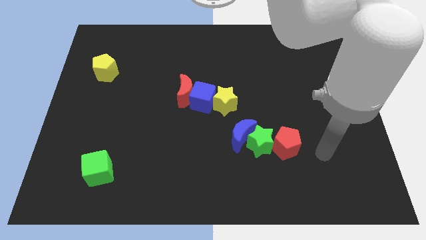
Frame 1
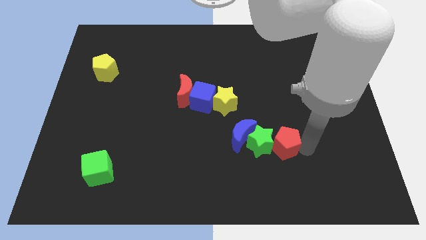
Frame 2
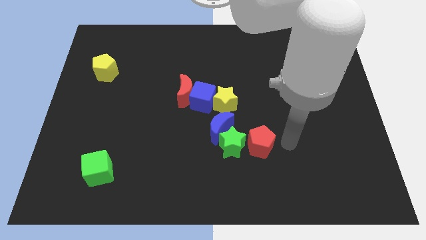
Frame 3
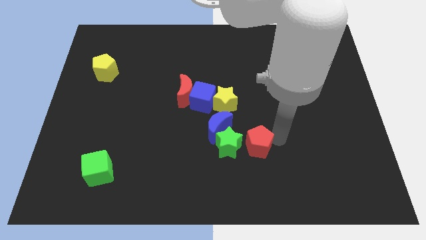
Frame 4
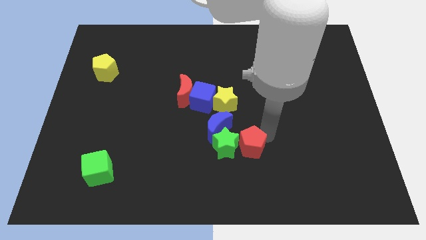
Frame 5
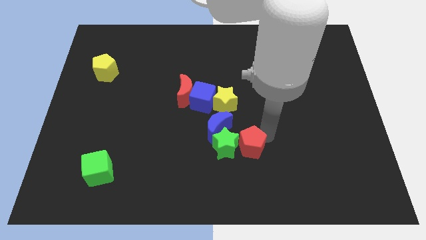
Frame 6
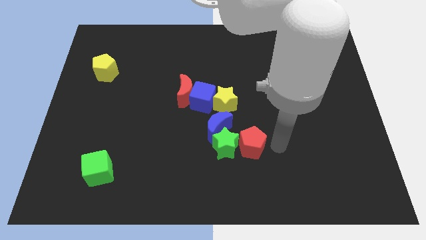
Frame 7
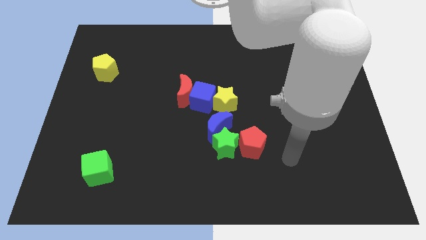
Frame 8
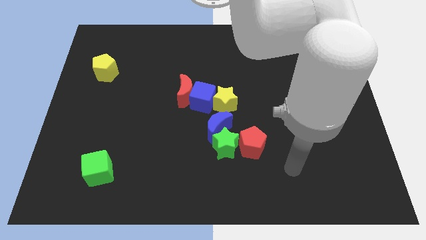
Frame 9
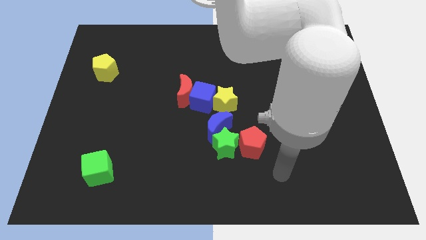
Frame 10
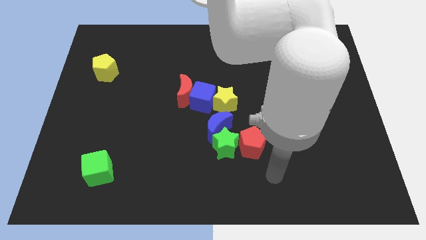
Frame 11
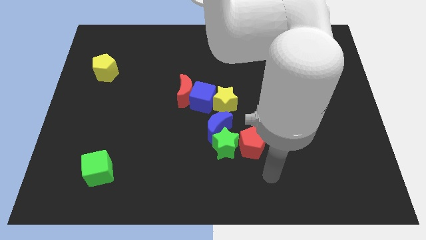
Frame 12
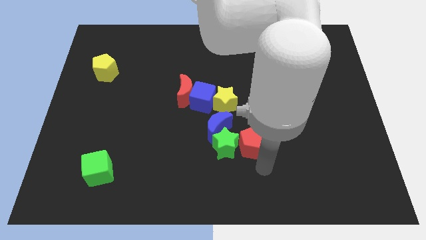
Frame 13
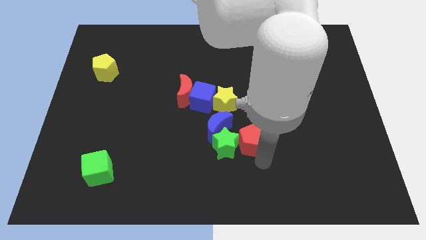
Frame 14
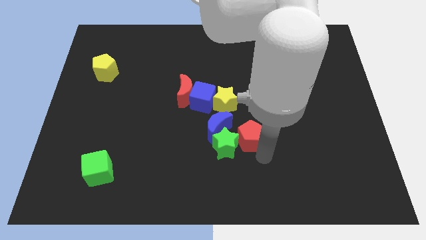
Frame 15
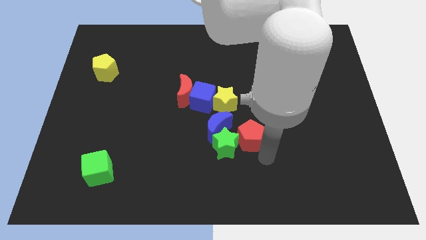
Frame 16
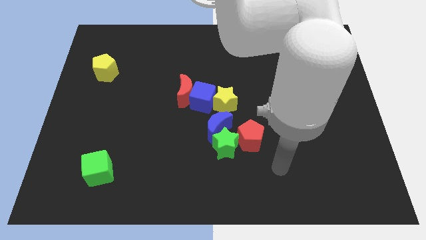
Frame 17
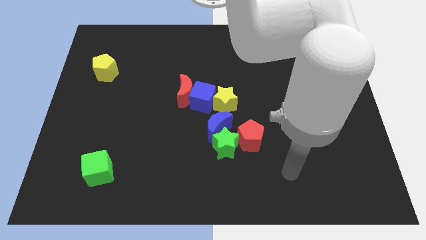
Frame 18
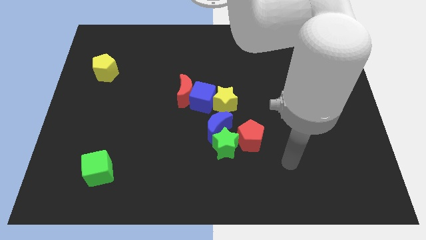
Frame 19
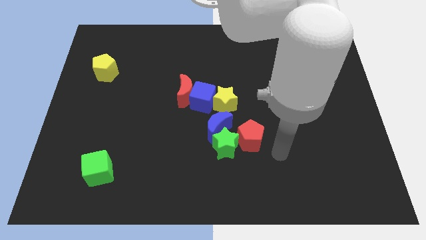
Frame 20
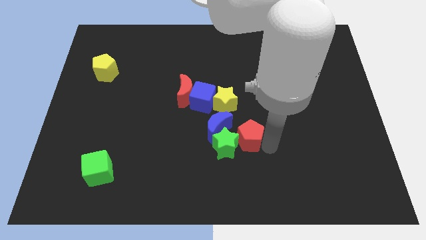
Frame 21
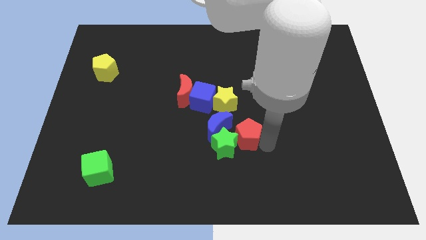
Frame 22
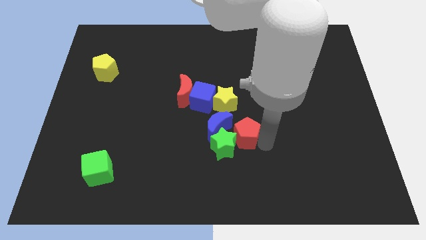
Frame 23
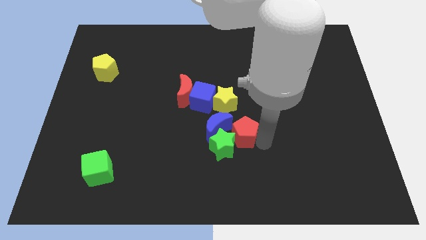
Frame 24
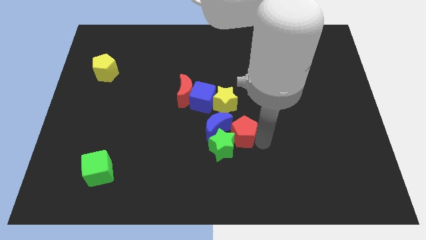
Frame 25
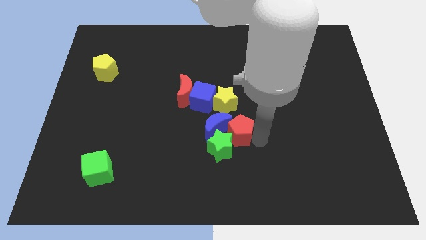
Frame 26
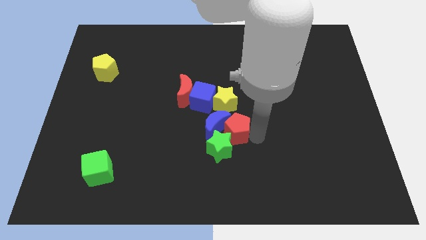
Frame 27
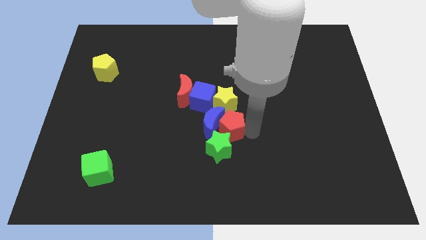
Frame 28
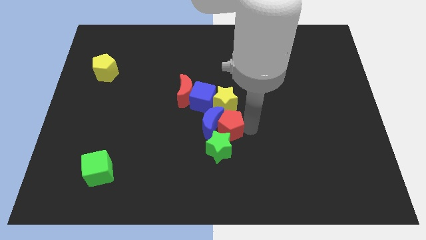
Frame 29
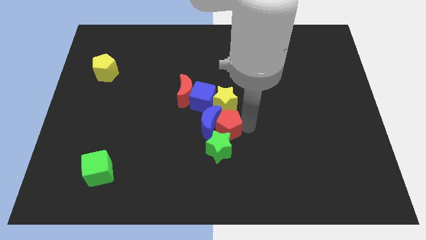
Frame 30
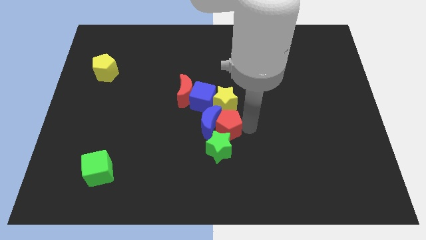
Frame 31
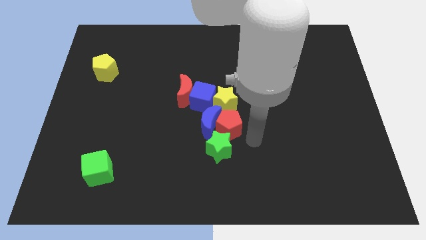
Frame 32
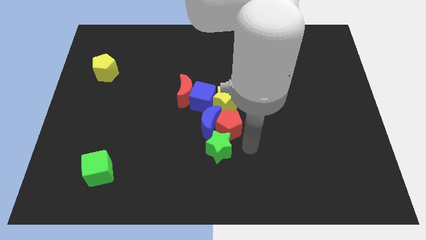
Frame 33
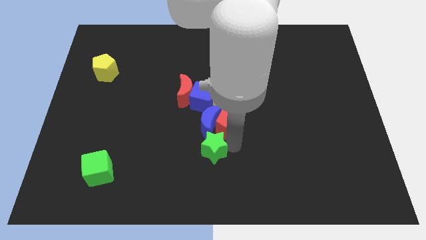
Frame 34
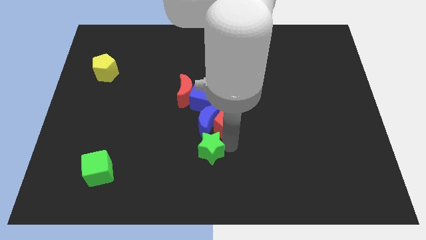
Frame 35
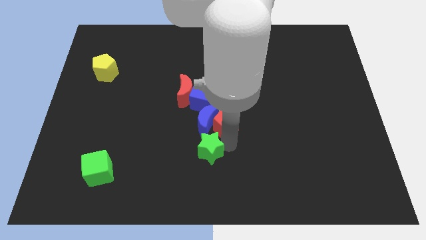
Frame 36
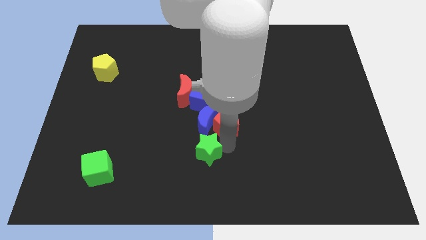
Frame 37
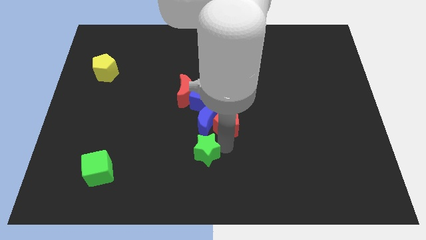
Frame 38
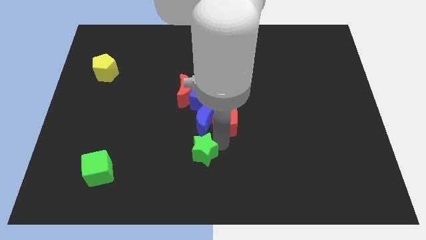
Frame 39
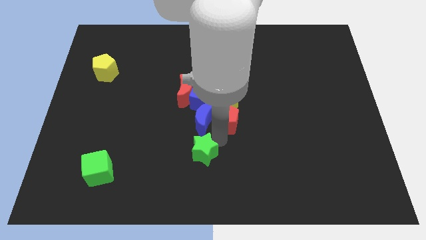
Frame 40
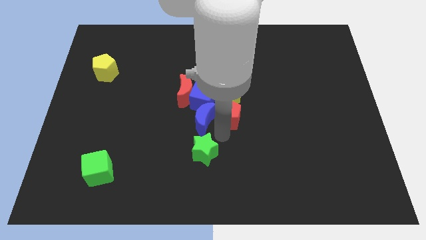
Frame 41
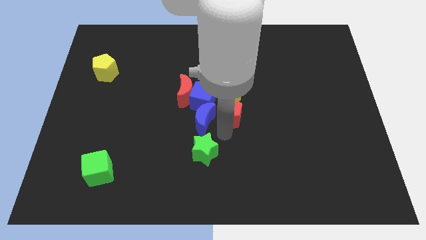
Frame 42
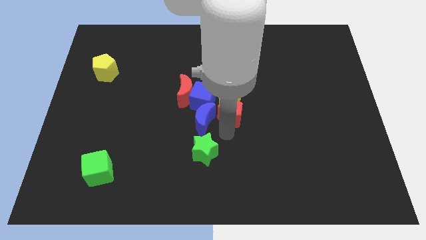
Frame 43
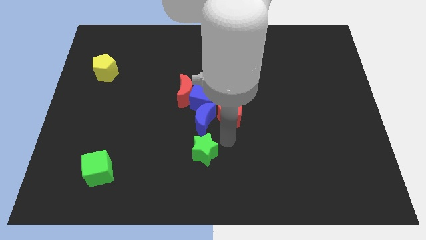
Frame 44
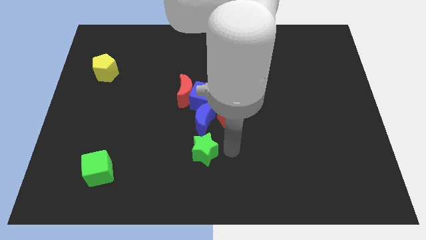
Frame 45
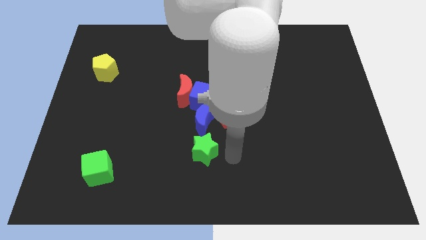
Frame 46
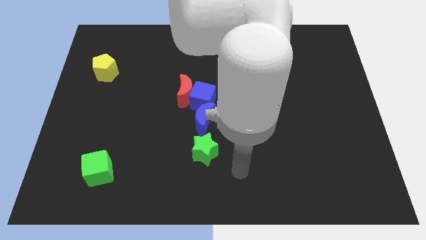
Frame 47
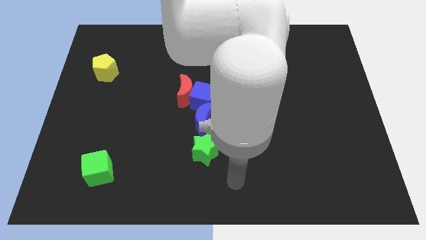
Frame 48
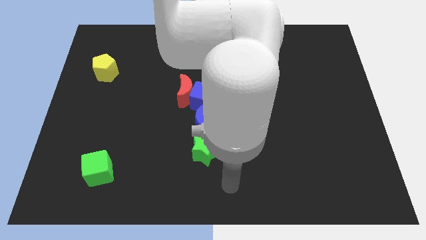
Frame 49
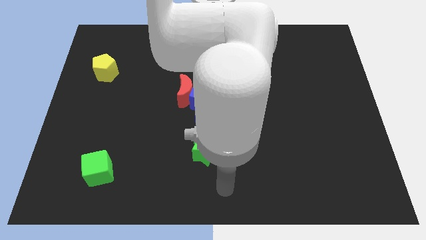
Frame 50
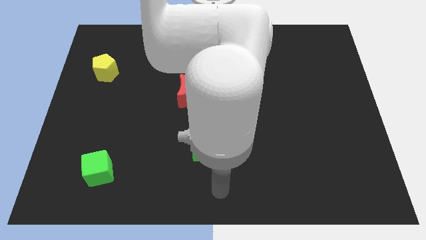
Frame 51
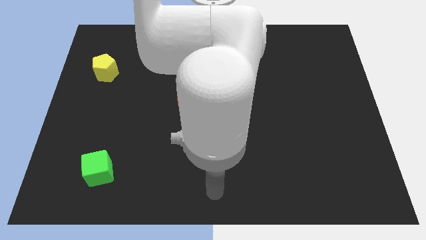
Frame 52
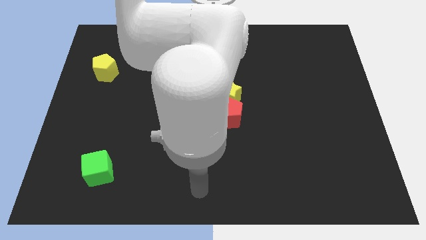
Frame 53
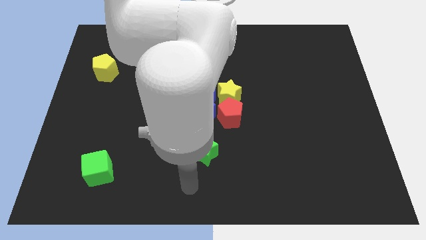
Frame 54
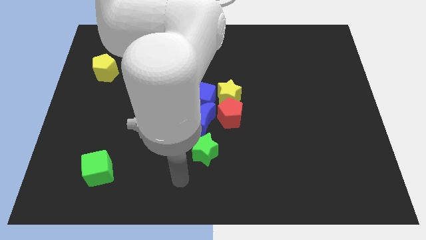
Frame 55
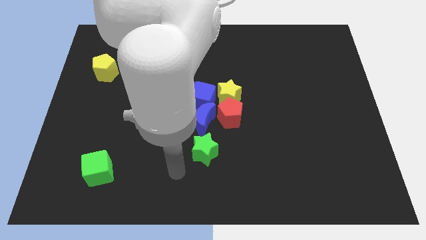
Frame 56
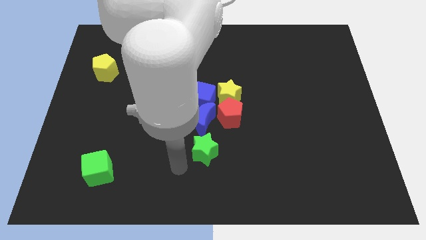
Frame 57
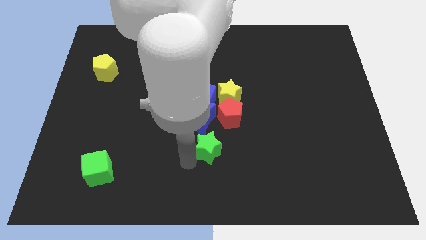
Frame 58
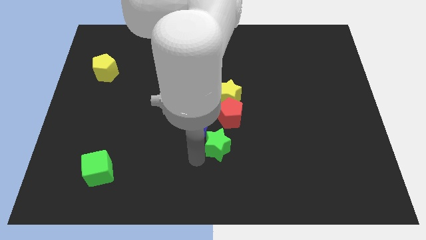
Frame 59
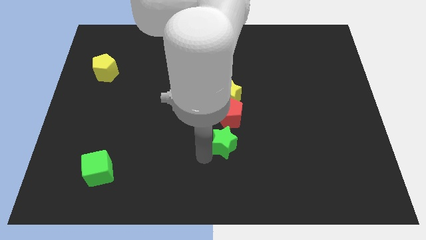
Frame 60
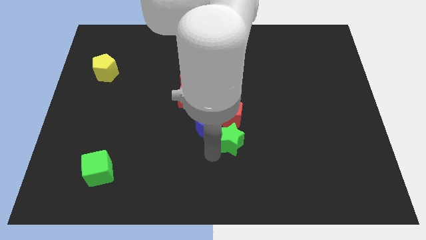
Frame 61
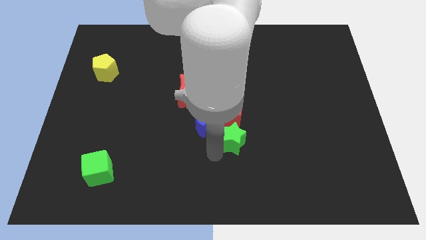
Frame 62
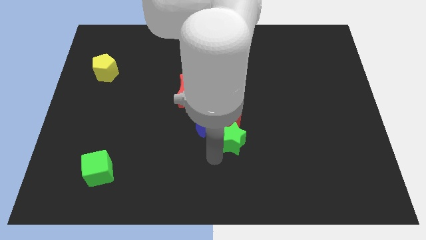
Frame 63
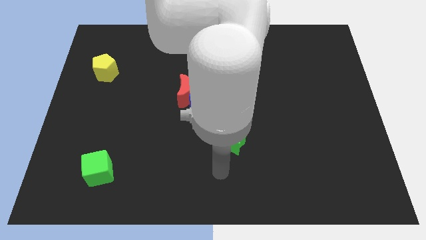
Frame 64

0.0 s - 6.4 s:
move the red pentagon to bottom of the yellow star

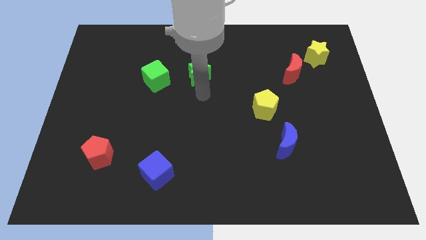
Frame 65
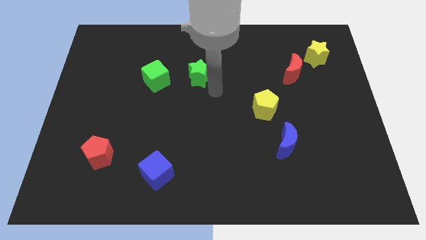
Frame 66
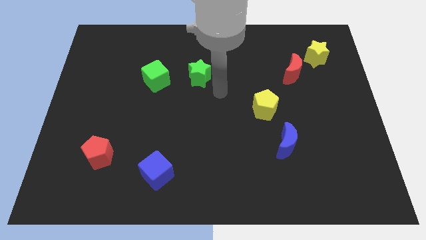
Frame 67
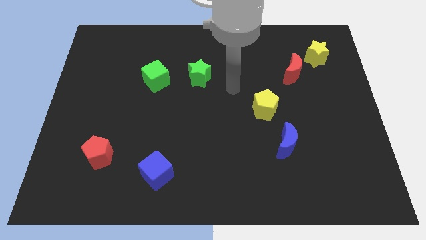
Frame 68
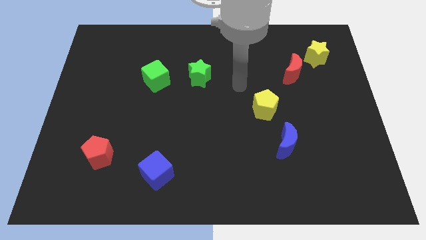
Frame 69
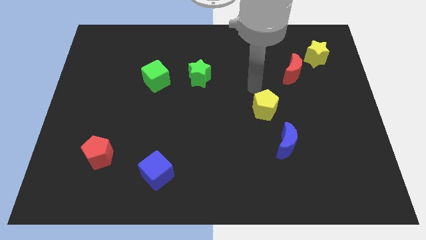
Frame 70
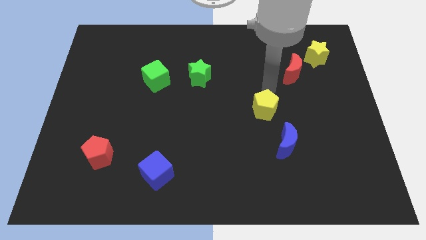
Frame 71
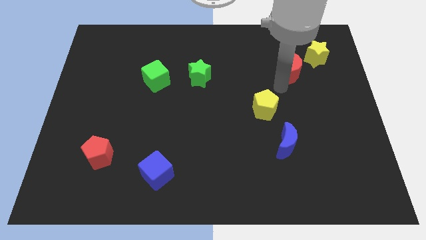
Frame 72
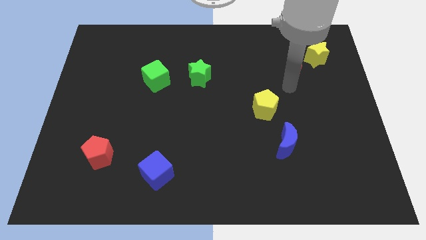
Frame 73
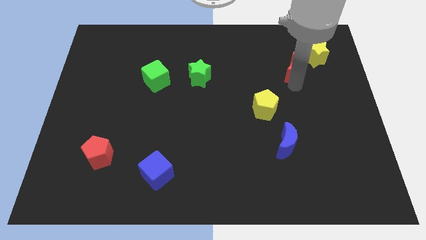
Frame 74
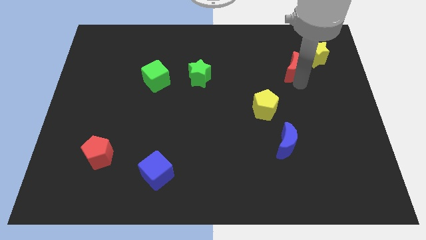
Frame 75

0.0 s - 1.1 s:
place the arm close to red moon

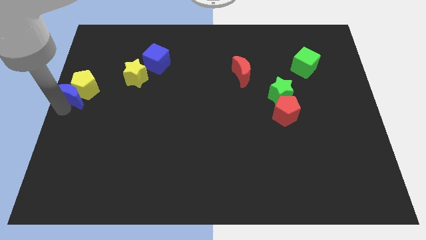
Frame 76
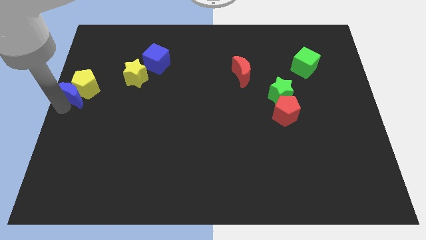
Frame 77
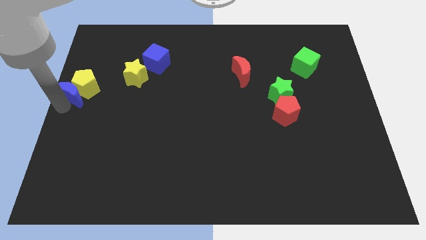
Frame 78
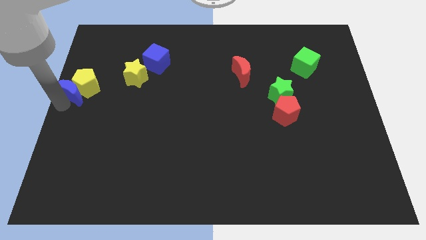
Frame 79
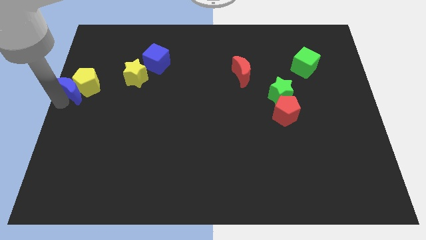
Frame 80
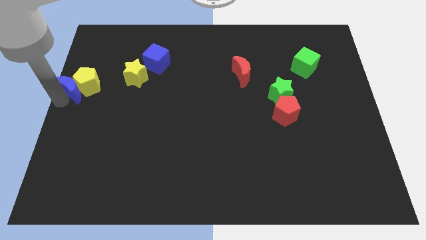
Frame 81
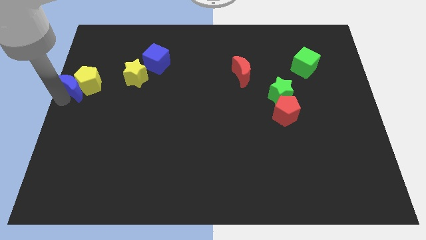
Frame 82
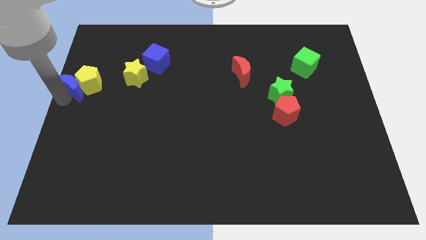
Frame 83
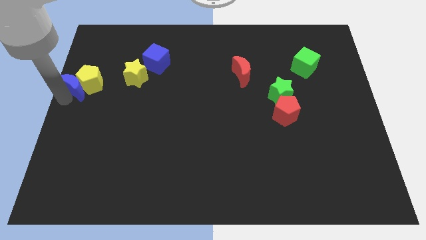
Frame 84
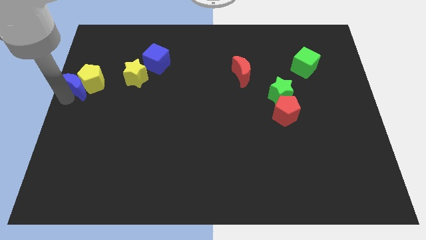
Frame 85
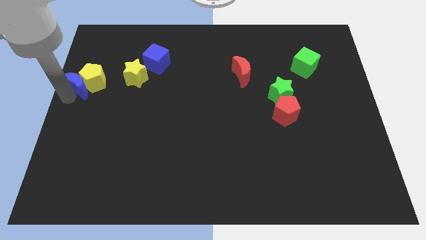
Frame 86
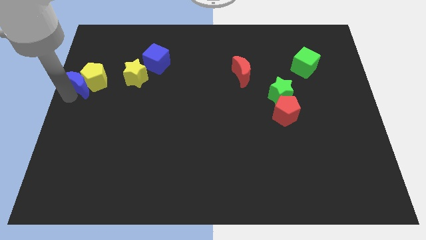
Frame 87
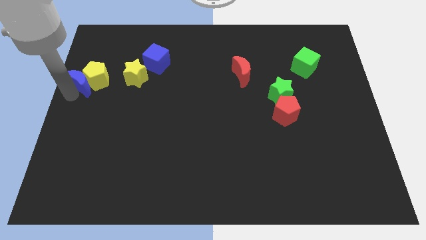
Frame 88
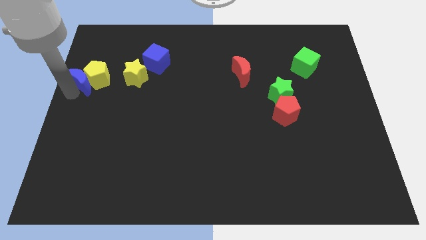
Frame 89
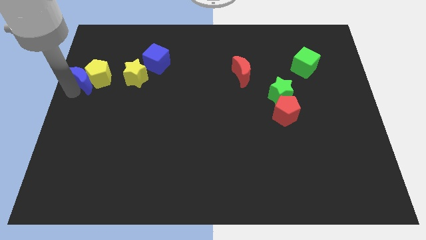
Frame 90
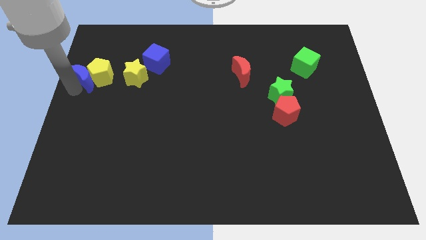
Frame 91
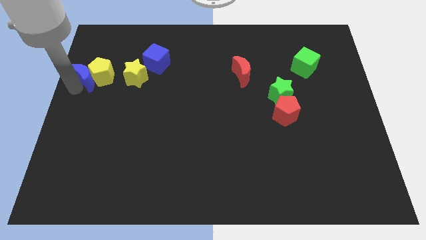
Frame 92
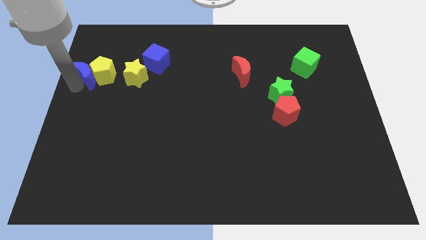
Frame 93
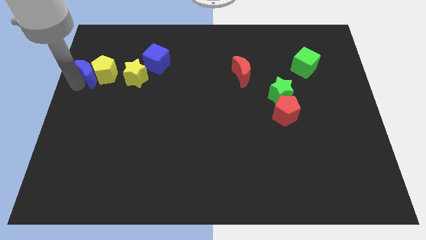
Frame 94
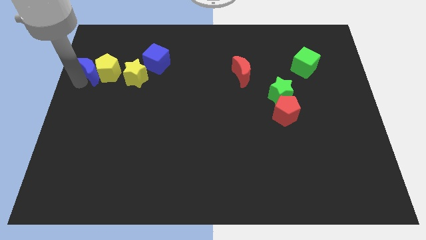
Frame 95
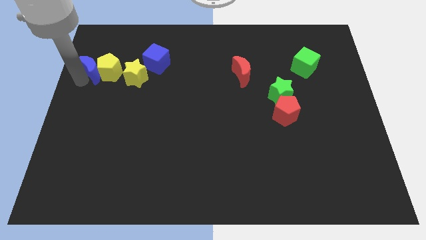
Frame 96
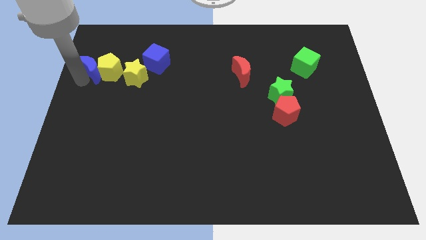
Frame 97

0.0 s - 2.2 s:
push both the yellow pentagon and blue crescent to the left of the yellow star
